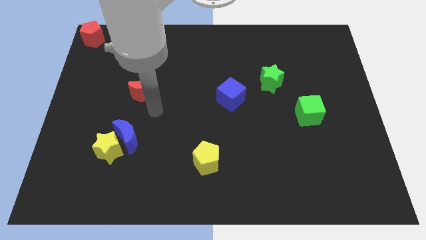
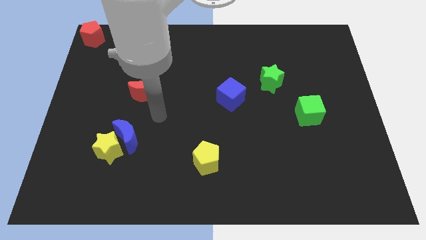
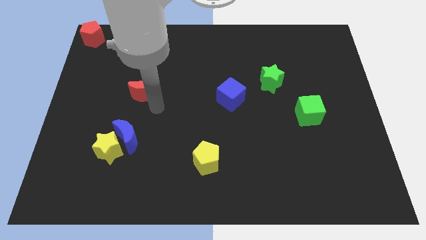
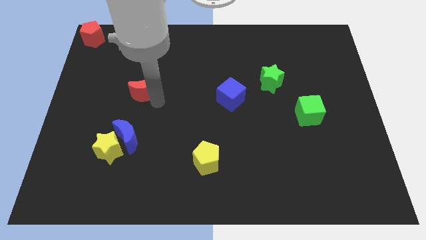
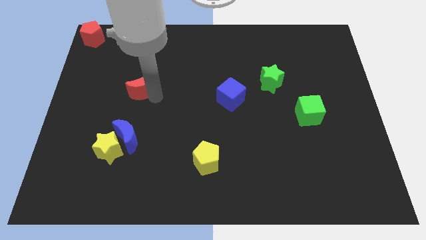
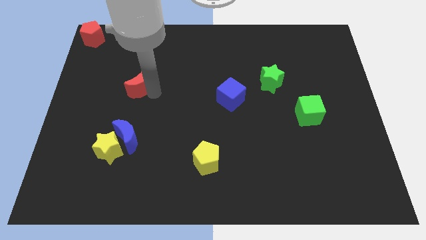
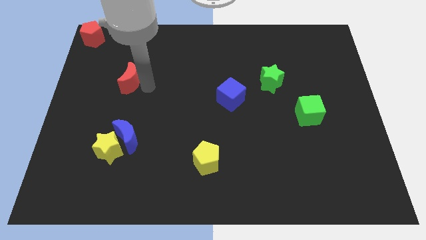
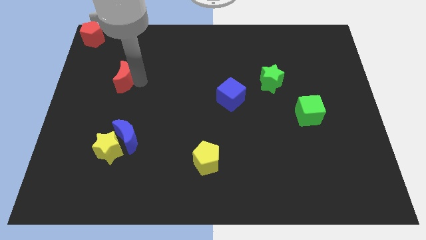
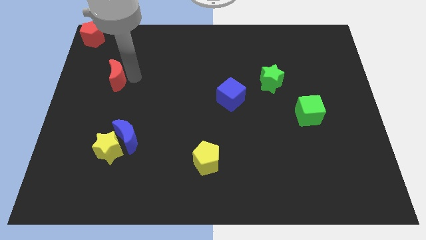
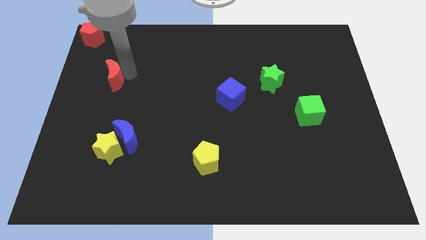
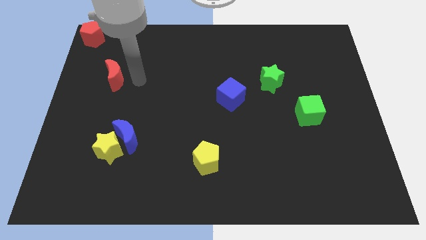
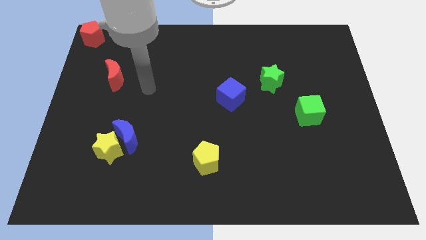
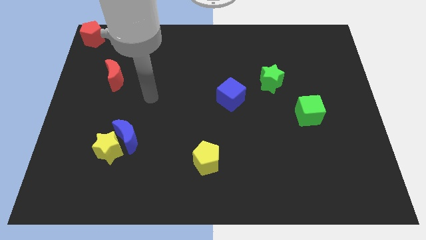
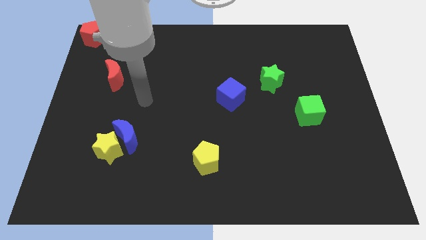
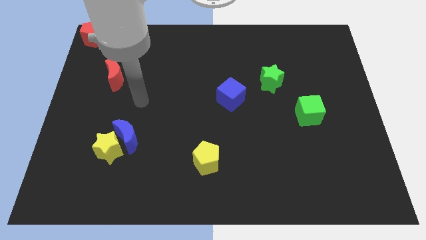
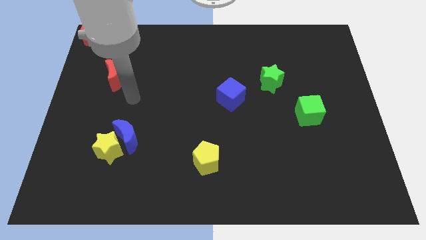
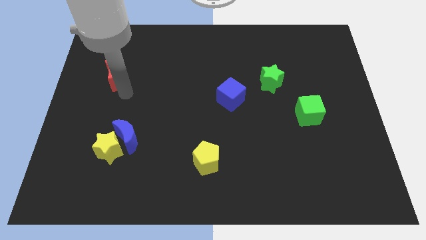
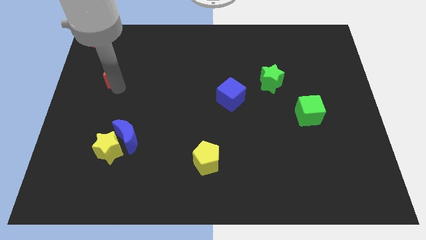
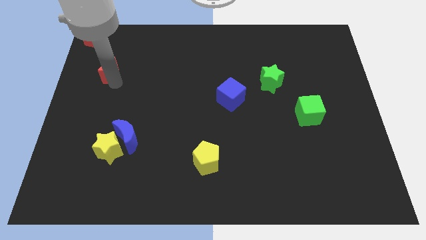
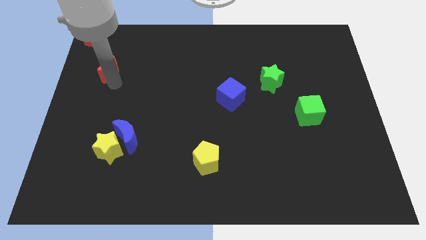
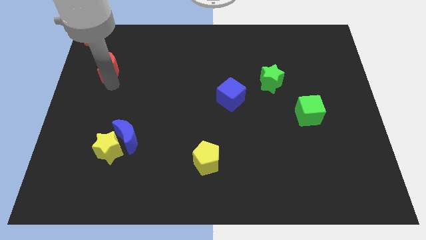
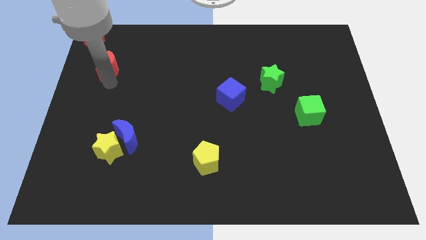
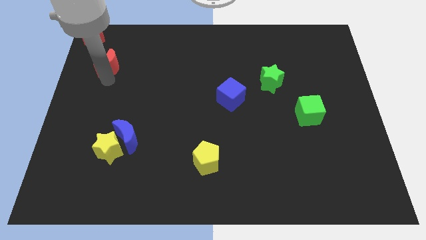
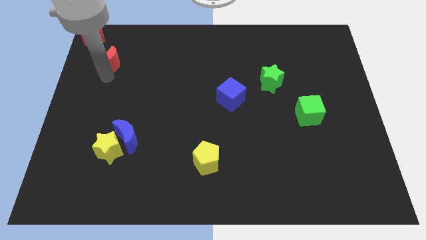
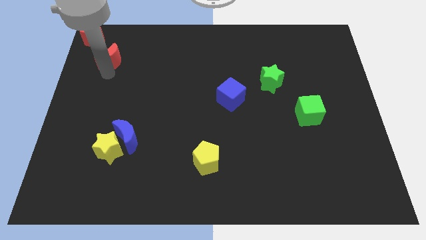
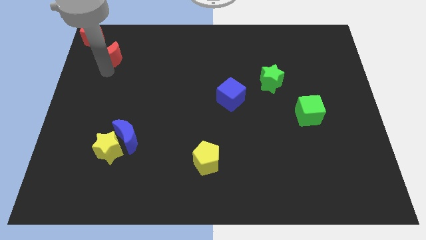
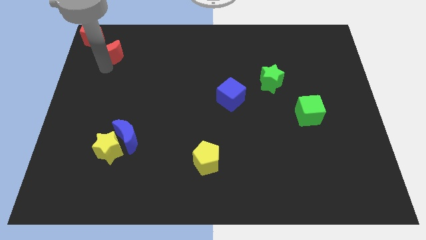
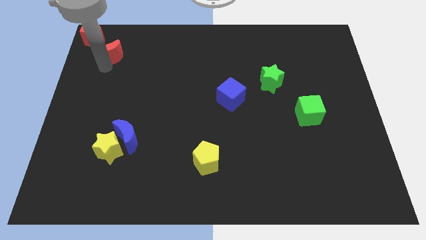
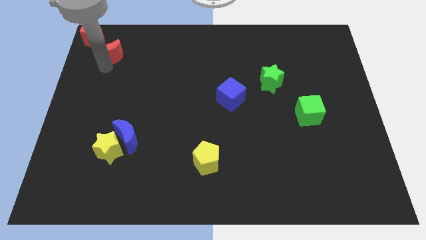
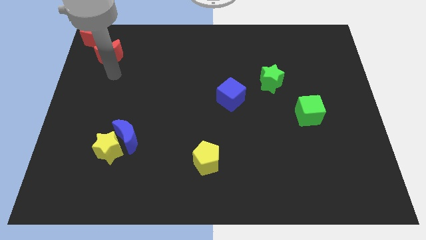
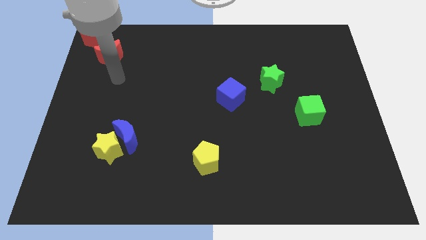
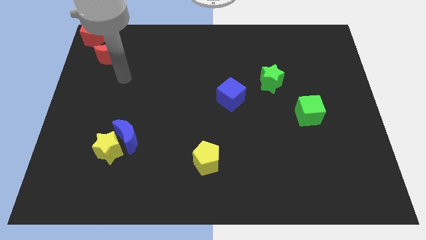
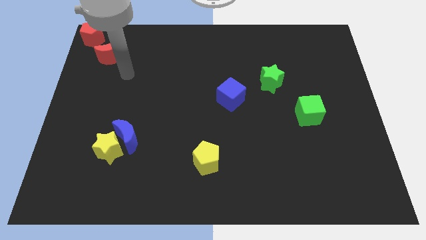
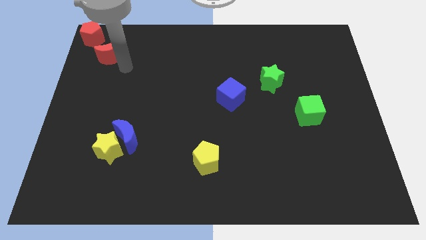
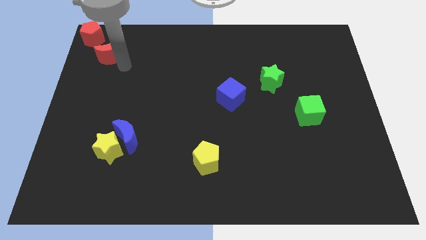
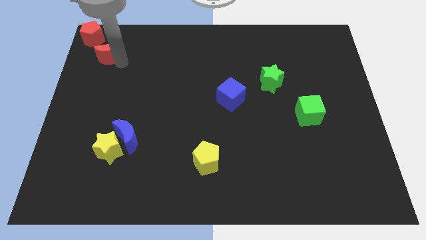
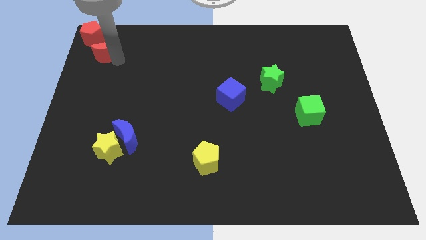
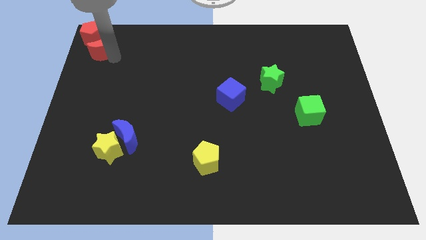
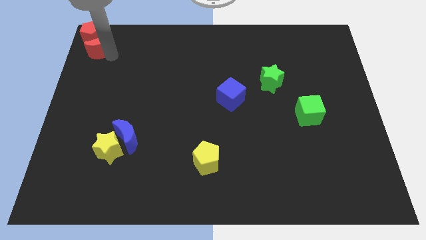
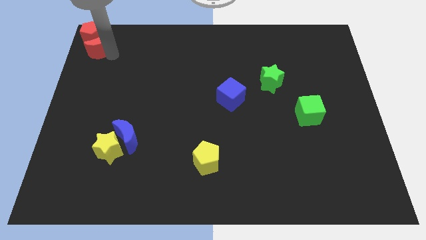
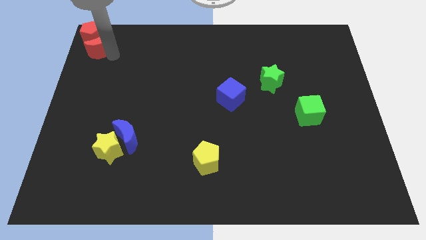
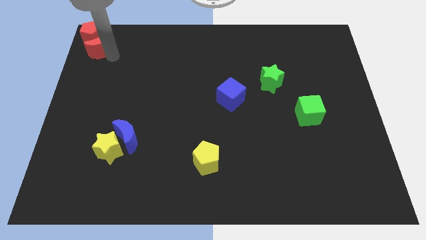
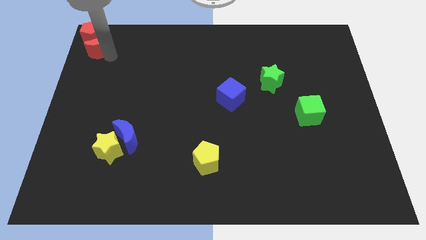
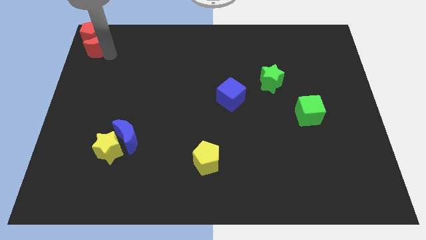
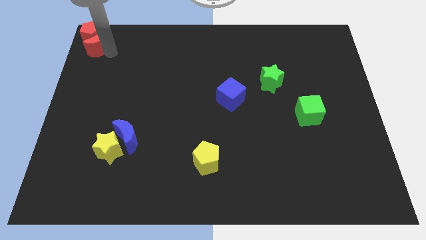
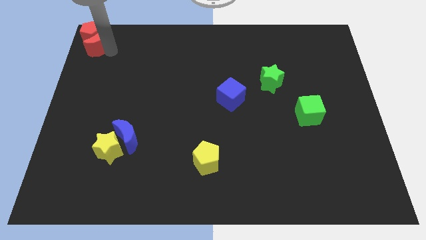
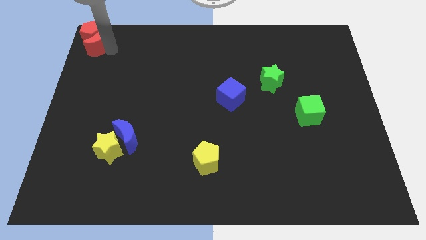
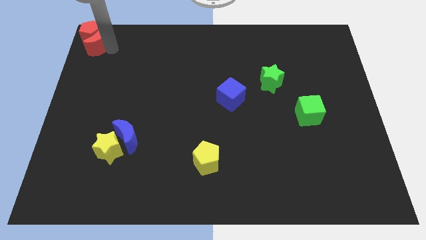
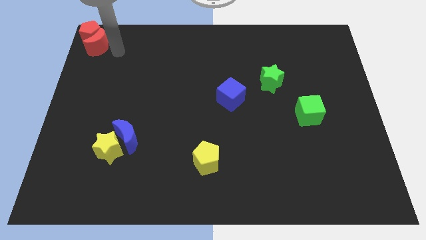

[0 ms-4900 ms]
push the red crescent into the red pentagon

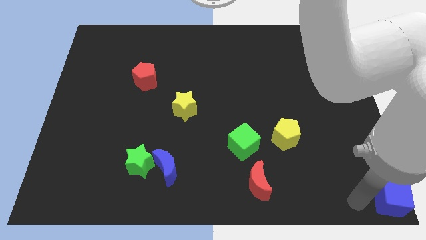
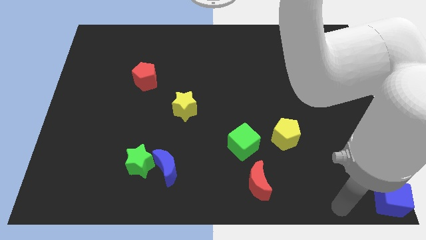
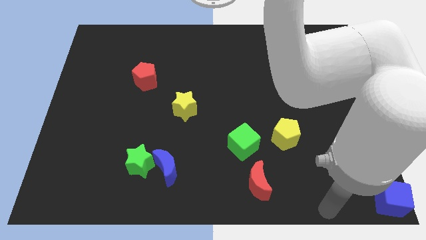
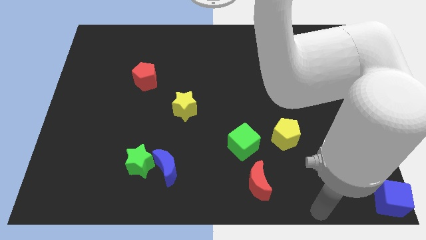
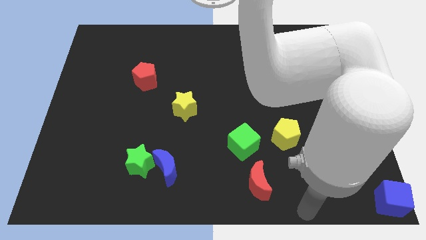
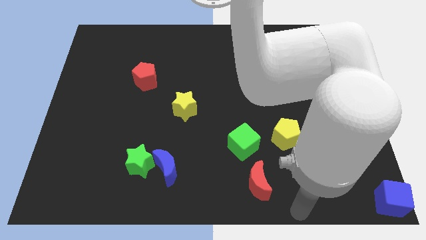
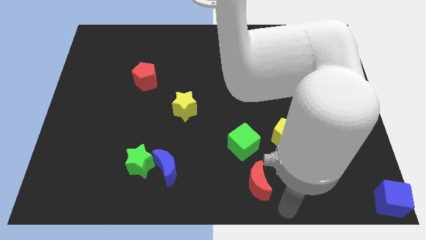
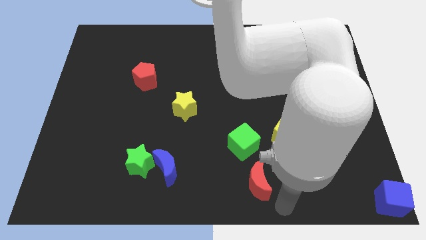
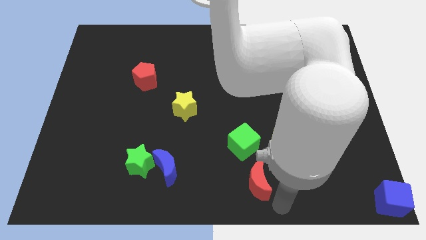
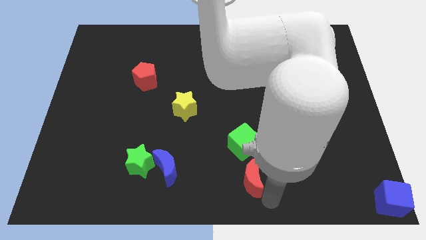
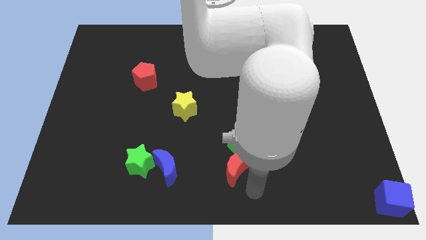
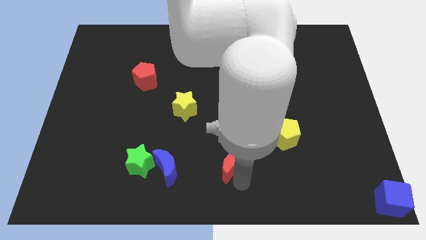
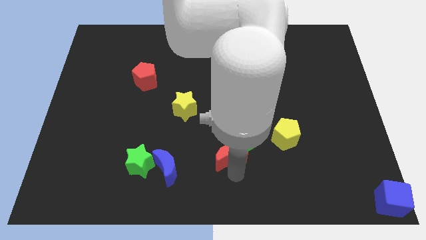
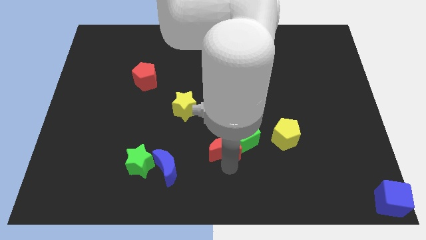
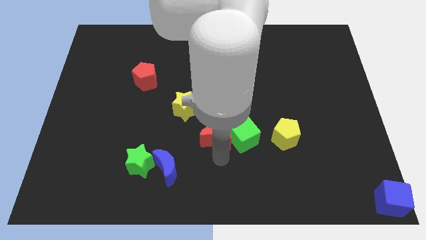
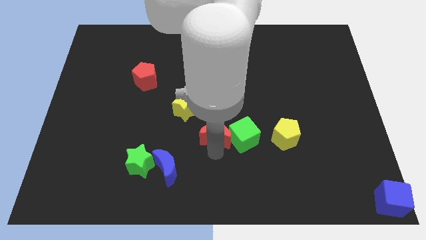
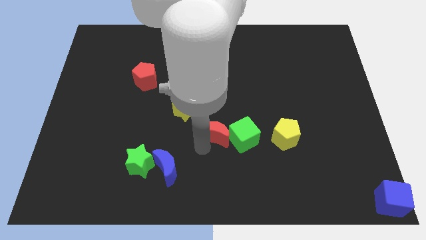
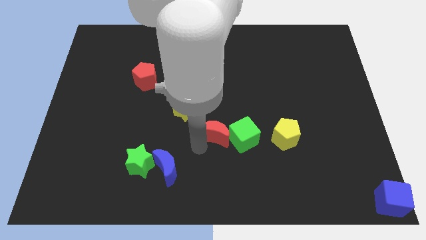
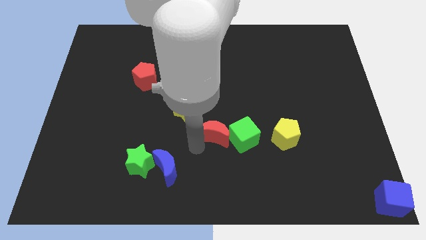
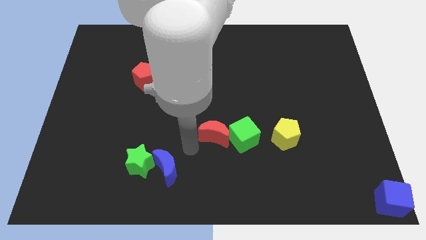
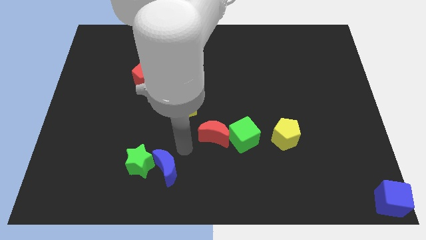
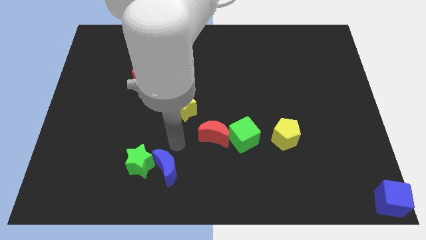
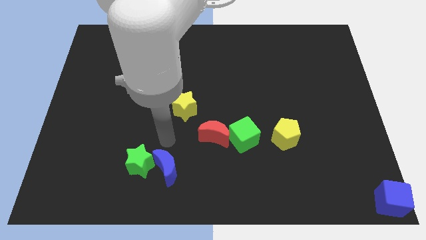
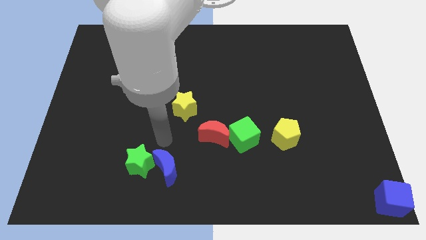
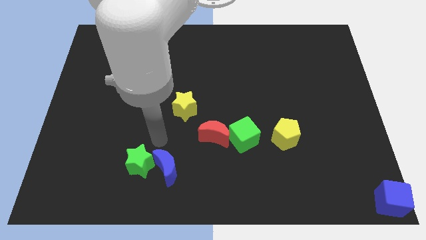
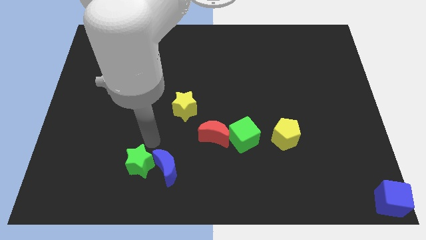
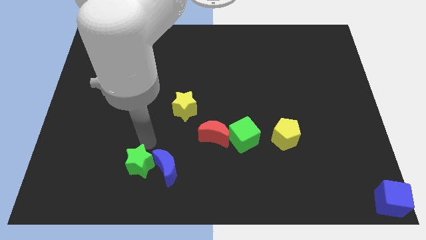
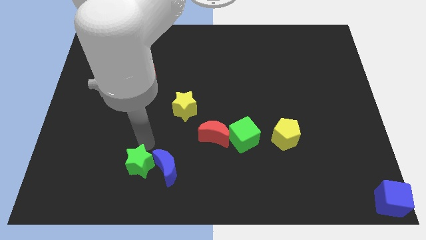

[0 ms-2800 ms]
push the red crescent to the left of the green cube

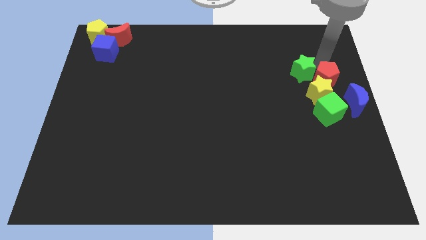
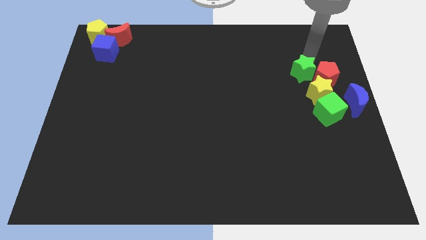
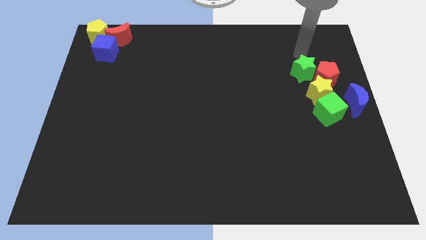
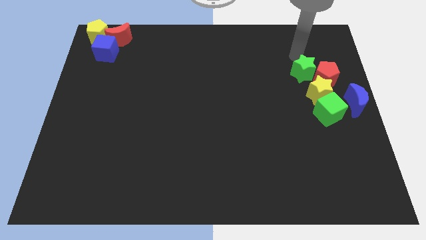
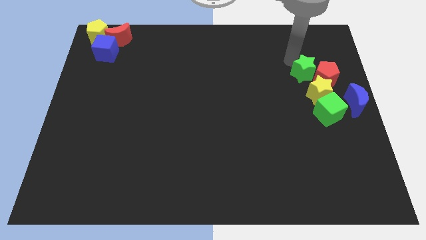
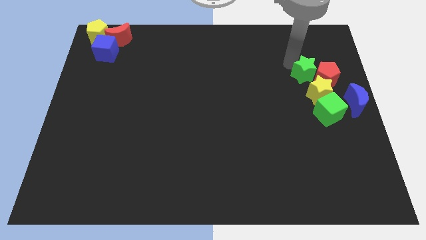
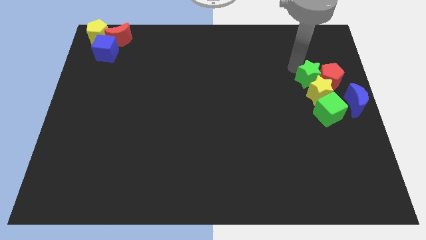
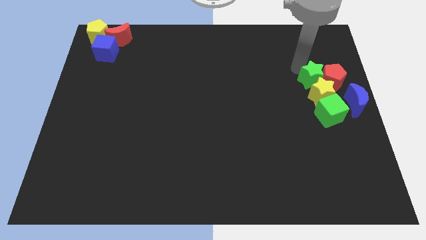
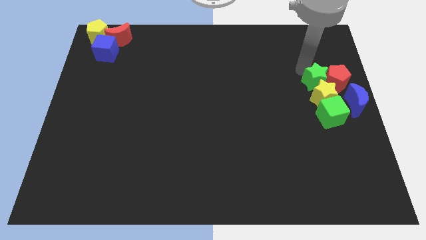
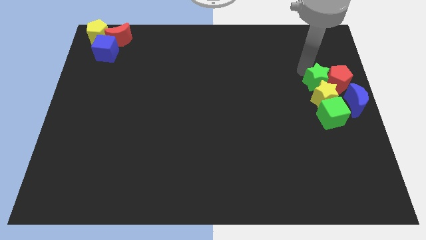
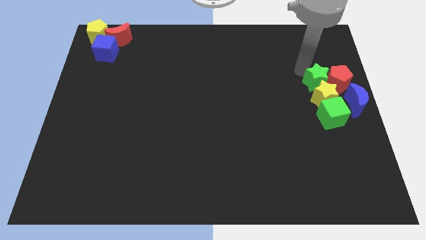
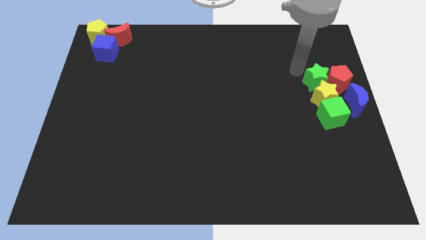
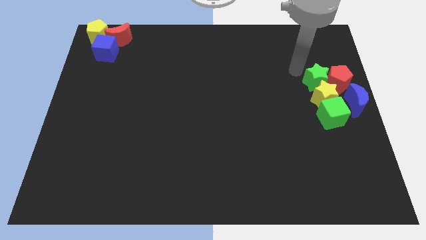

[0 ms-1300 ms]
push the green star along with the red pentagon to the center right of the board

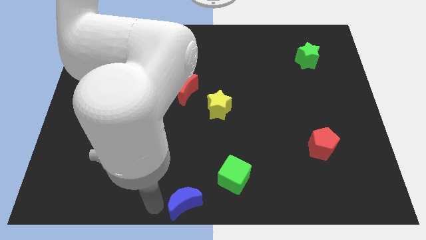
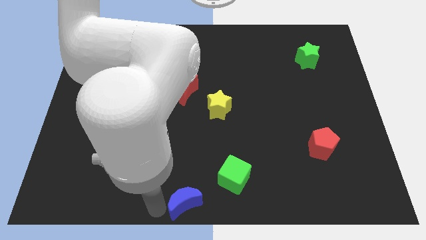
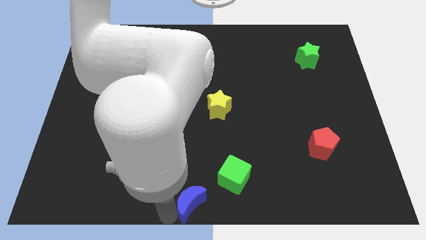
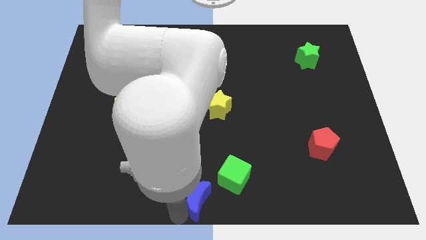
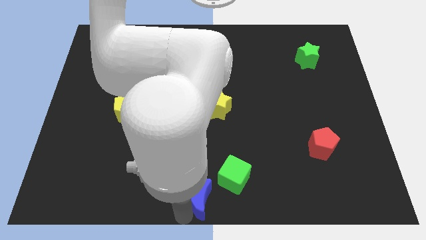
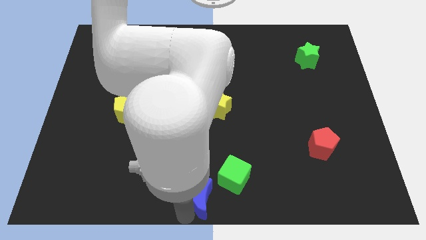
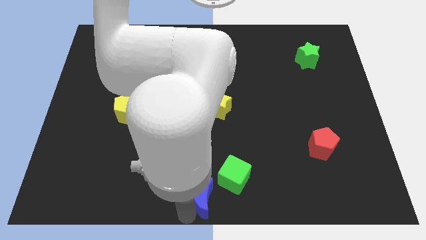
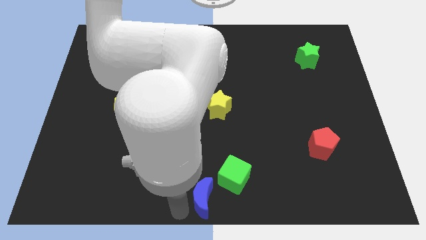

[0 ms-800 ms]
place blue crescent on the below center of the board
